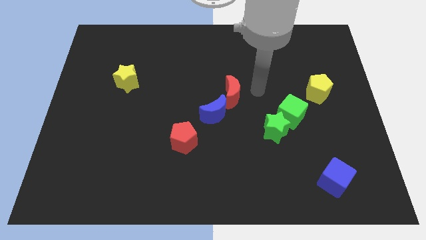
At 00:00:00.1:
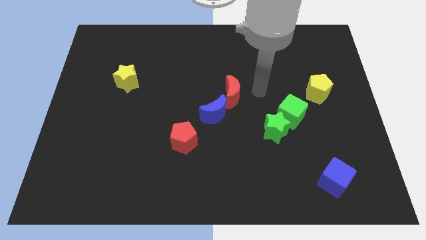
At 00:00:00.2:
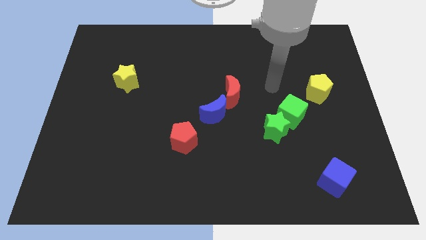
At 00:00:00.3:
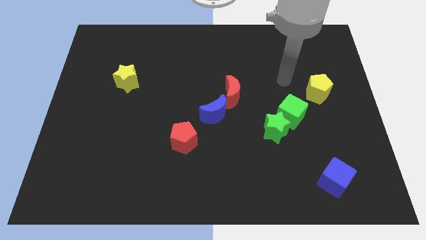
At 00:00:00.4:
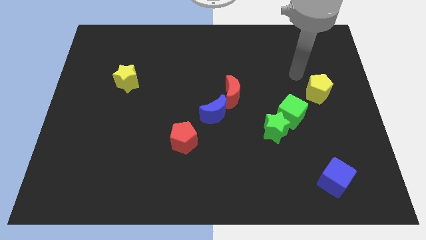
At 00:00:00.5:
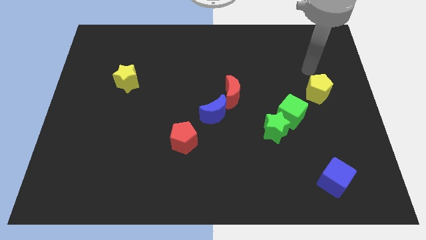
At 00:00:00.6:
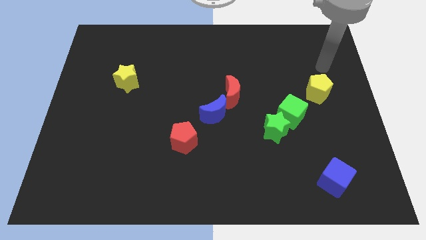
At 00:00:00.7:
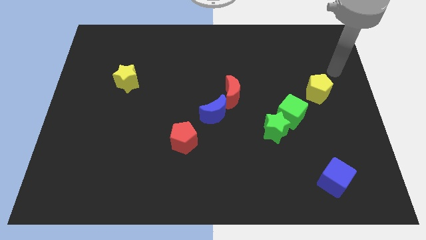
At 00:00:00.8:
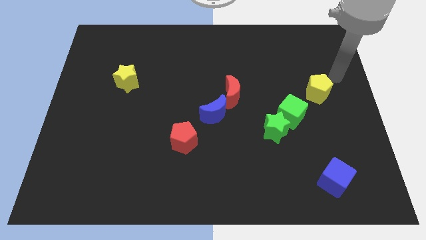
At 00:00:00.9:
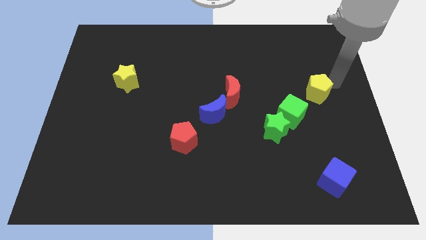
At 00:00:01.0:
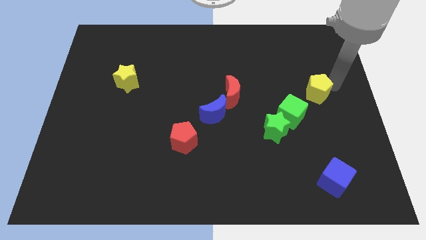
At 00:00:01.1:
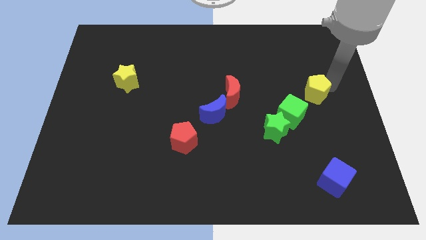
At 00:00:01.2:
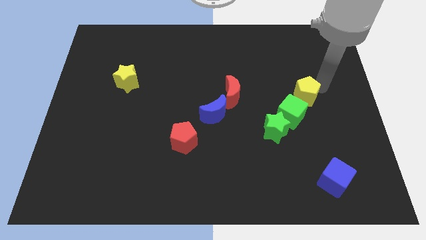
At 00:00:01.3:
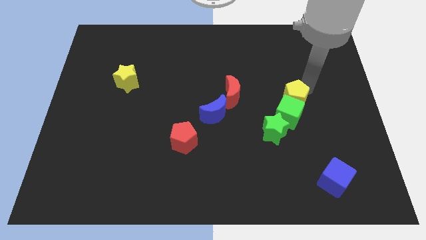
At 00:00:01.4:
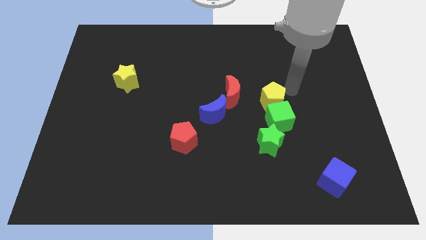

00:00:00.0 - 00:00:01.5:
move the yellow pentagon to the top of the green cube

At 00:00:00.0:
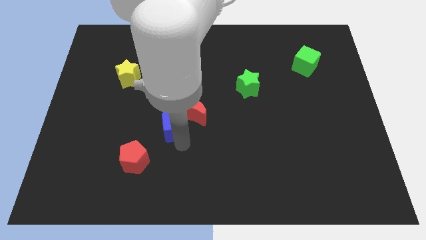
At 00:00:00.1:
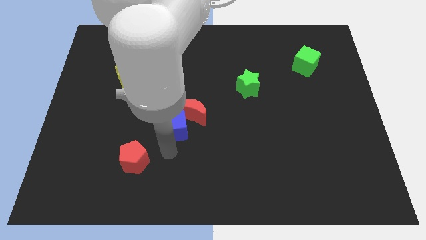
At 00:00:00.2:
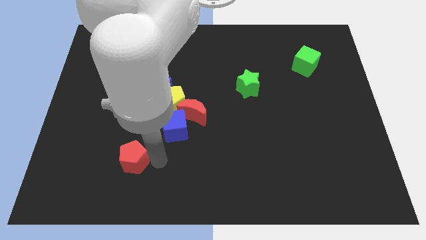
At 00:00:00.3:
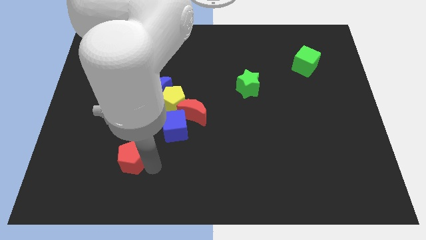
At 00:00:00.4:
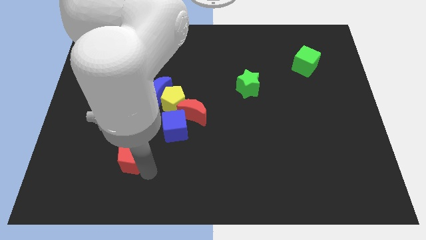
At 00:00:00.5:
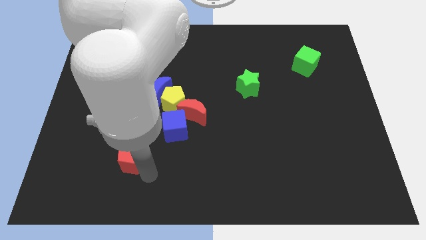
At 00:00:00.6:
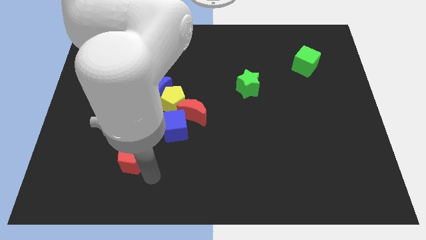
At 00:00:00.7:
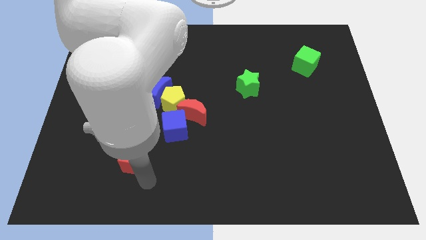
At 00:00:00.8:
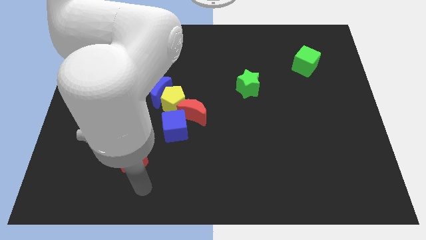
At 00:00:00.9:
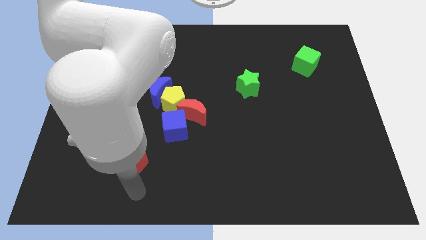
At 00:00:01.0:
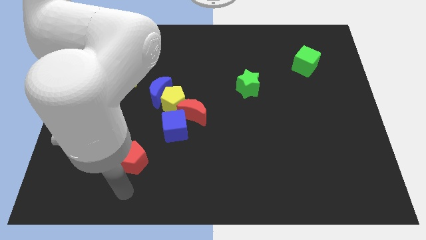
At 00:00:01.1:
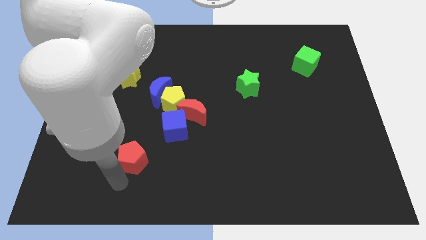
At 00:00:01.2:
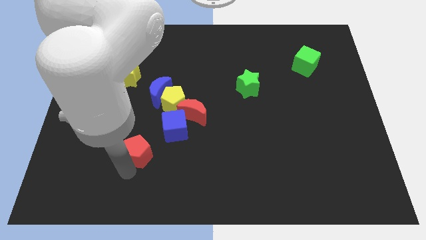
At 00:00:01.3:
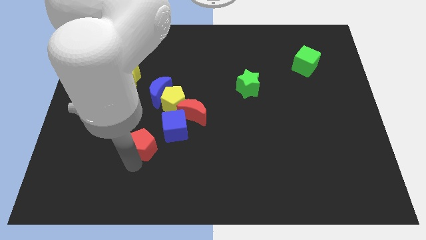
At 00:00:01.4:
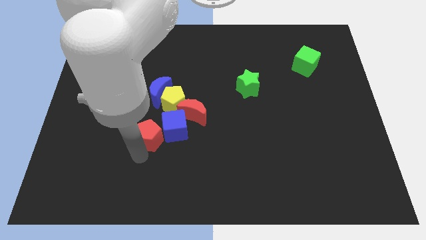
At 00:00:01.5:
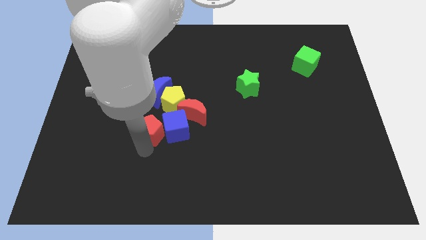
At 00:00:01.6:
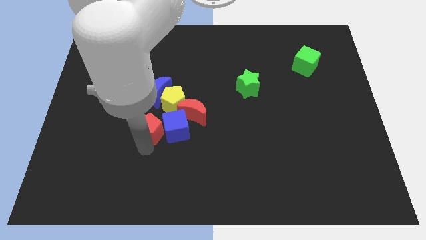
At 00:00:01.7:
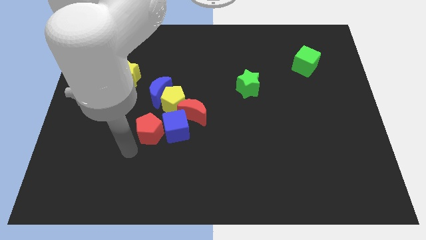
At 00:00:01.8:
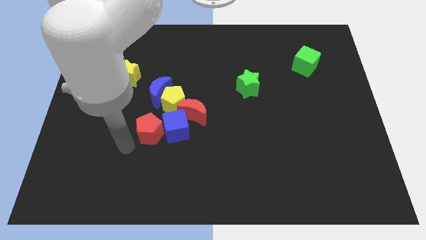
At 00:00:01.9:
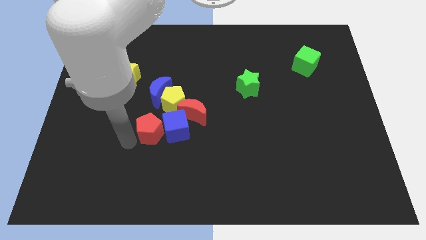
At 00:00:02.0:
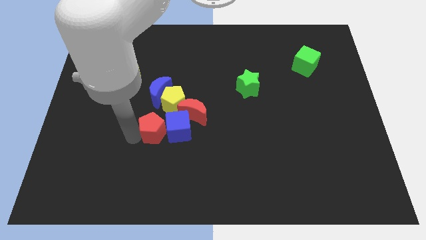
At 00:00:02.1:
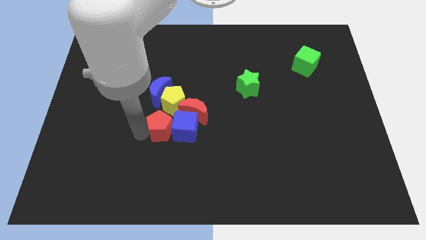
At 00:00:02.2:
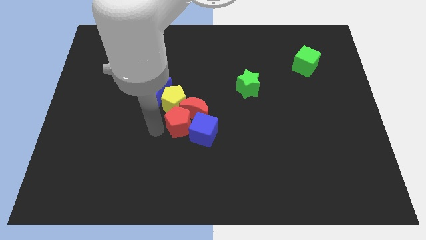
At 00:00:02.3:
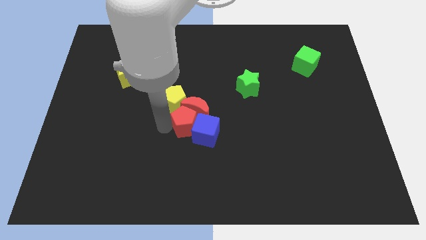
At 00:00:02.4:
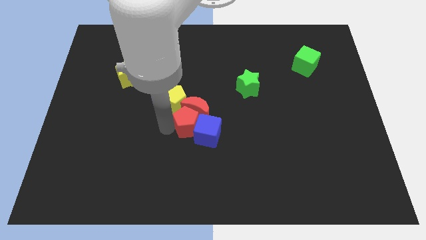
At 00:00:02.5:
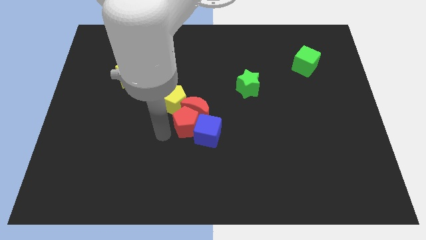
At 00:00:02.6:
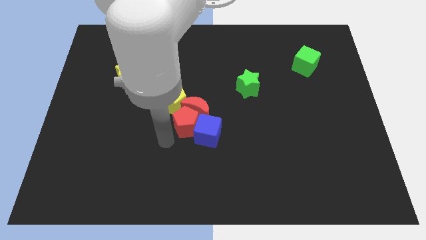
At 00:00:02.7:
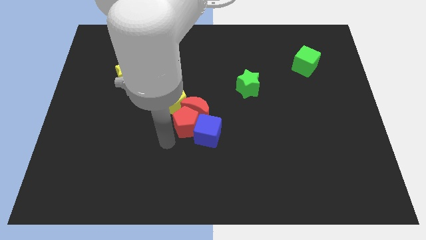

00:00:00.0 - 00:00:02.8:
move the red pentagon close to red moon

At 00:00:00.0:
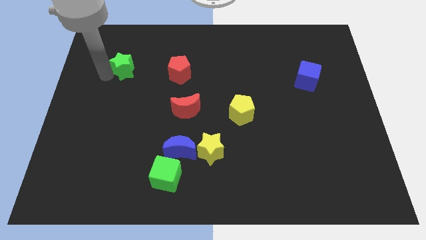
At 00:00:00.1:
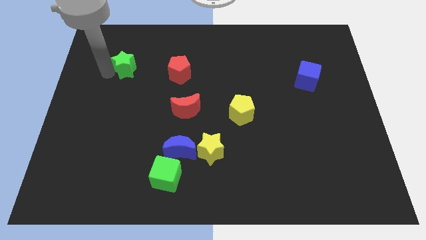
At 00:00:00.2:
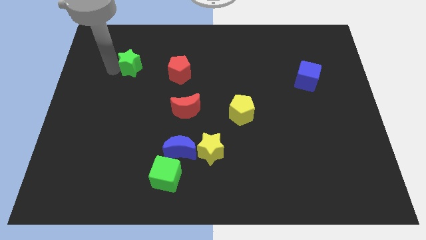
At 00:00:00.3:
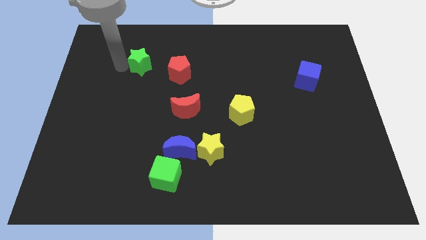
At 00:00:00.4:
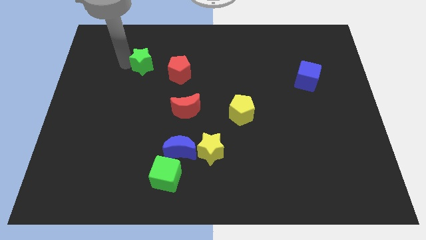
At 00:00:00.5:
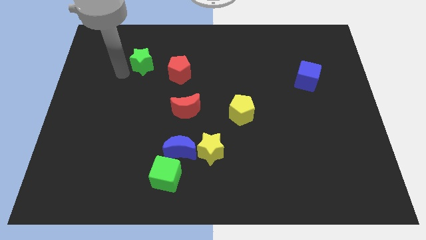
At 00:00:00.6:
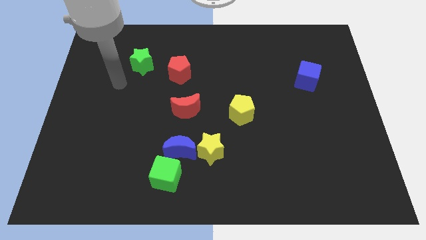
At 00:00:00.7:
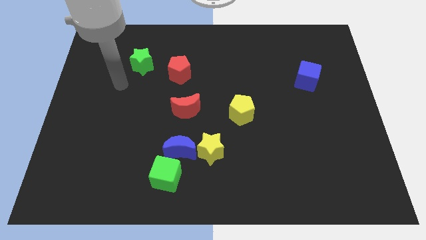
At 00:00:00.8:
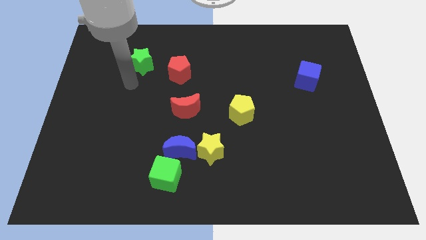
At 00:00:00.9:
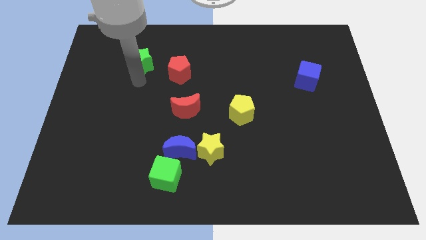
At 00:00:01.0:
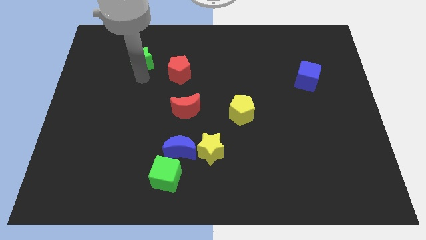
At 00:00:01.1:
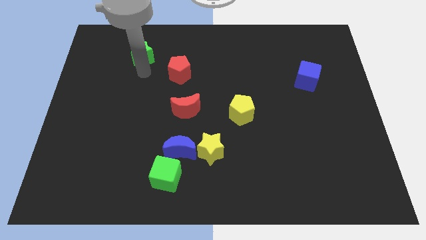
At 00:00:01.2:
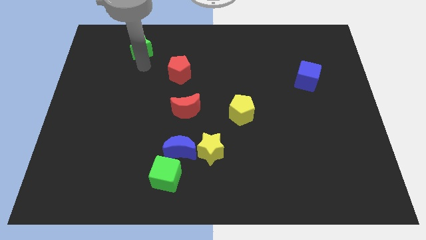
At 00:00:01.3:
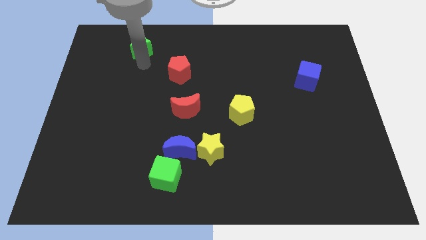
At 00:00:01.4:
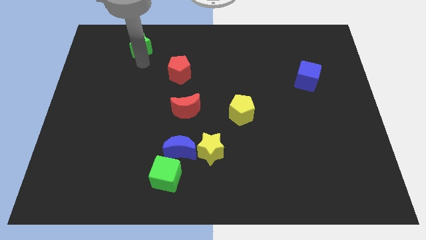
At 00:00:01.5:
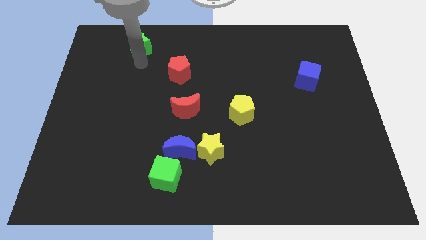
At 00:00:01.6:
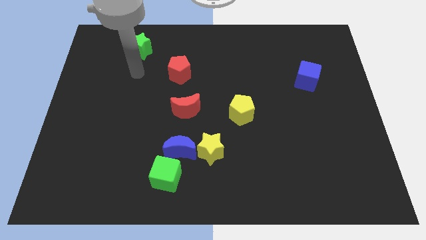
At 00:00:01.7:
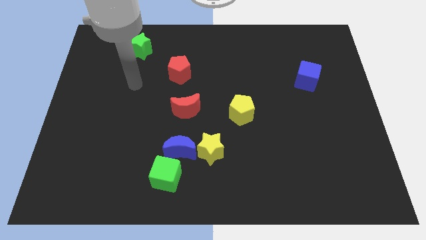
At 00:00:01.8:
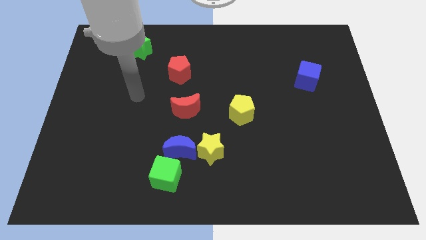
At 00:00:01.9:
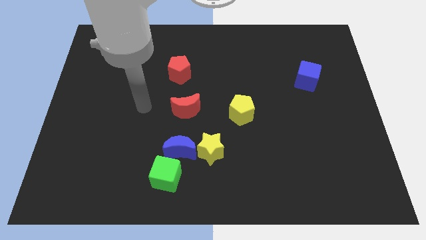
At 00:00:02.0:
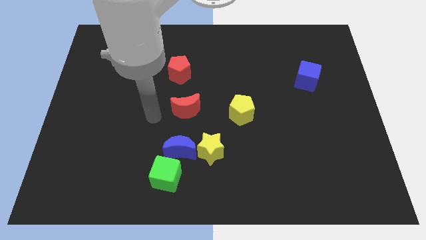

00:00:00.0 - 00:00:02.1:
move the green star slightly towards the top

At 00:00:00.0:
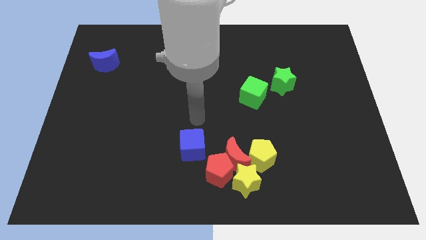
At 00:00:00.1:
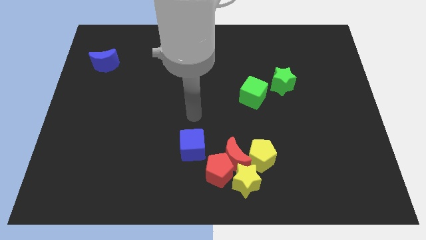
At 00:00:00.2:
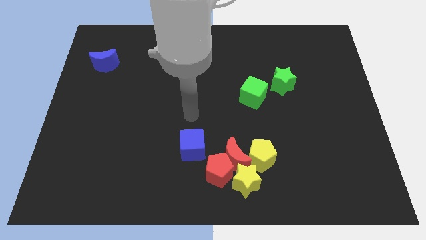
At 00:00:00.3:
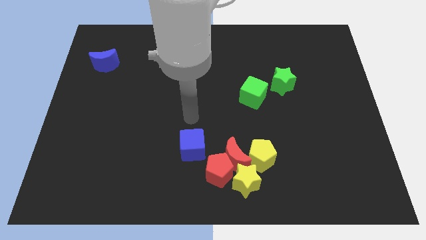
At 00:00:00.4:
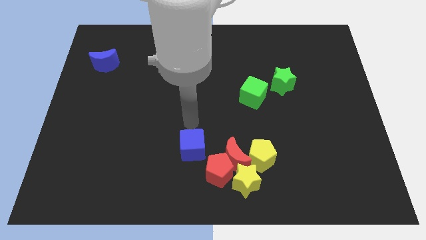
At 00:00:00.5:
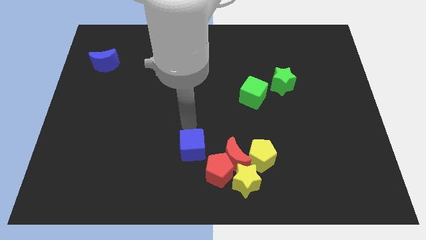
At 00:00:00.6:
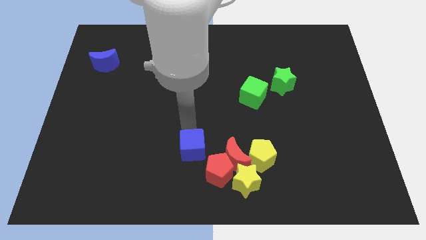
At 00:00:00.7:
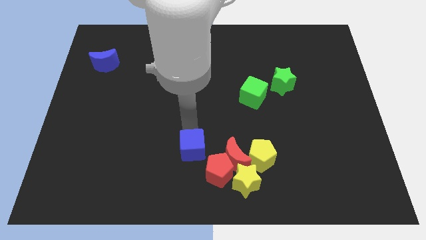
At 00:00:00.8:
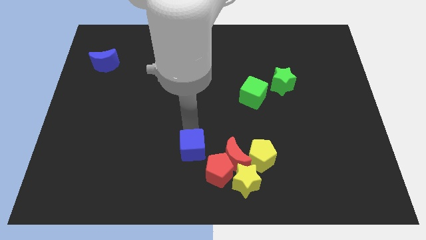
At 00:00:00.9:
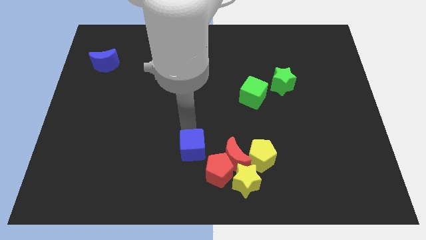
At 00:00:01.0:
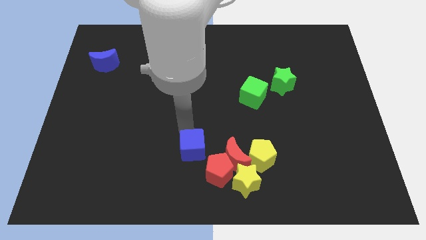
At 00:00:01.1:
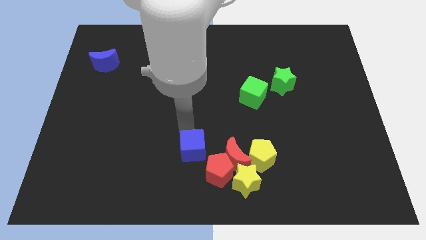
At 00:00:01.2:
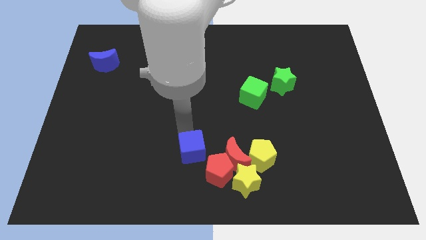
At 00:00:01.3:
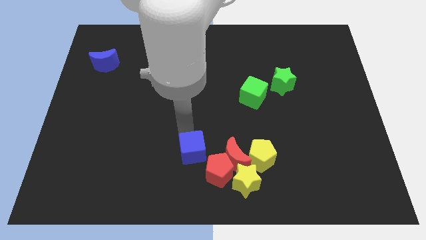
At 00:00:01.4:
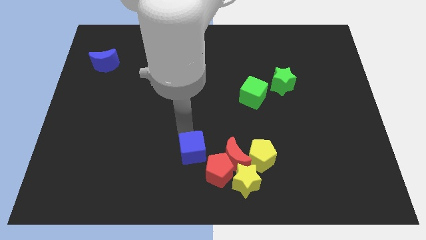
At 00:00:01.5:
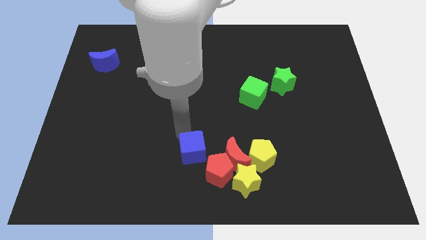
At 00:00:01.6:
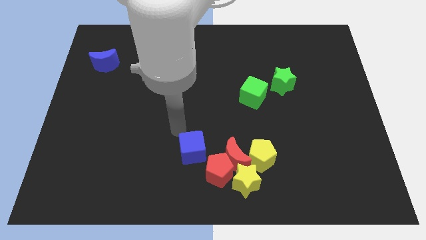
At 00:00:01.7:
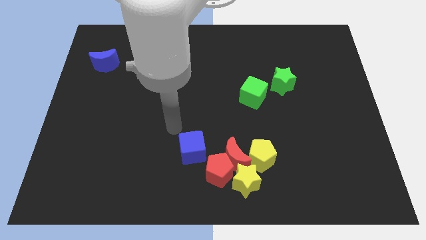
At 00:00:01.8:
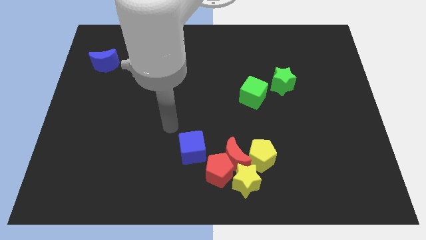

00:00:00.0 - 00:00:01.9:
push the blue cube slightly towards the red pentagon

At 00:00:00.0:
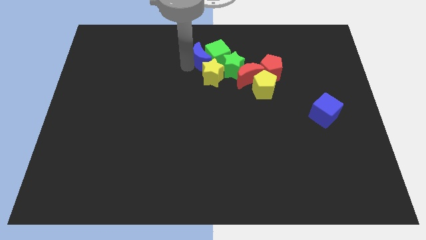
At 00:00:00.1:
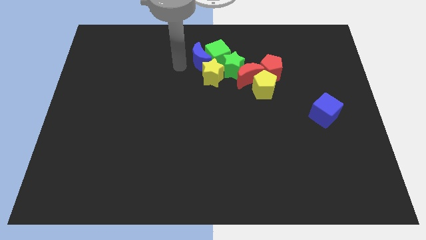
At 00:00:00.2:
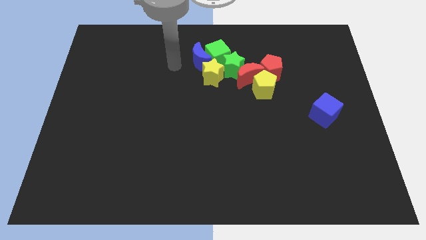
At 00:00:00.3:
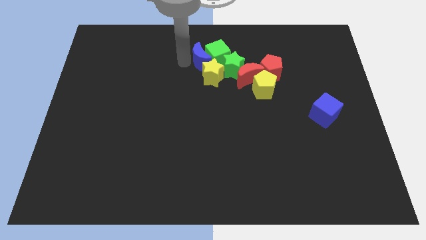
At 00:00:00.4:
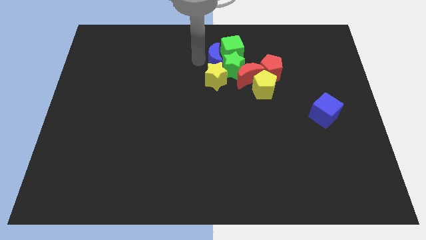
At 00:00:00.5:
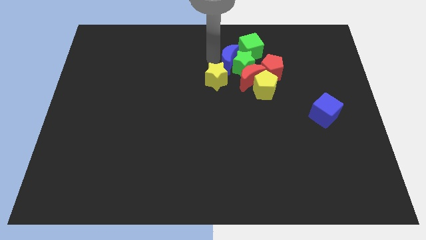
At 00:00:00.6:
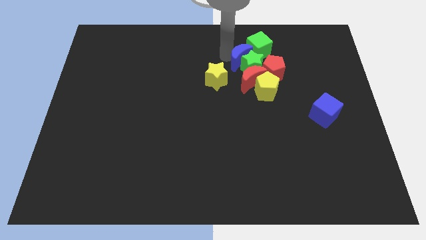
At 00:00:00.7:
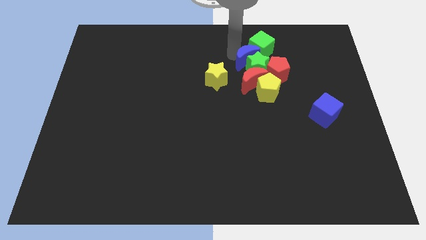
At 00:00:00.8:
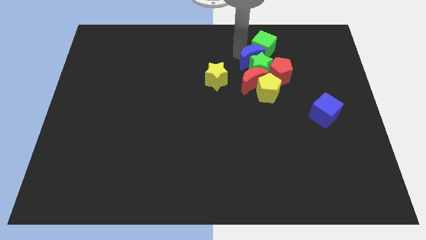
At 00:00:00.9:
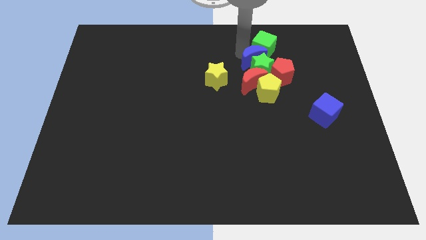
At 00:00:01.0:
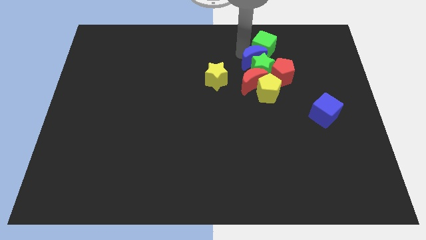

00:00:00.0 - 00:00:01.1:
separate group of blocks from yellow star
